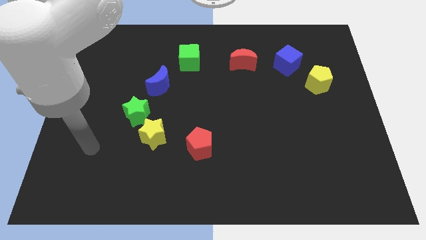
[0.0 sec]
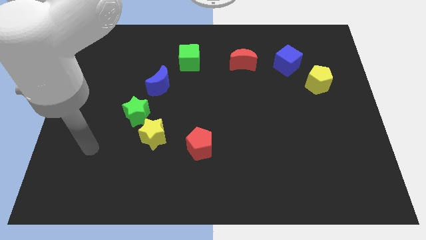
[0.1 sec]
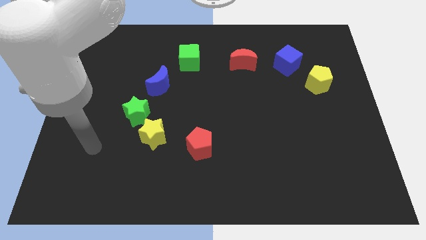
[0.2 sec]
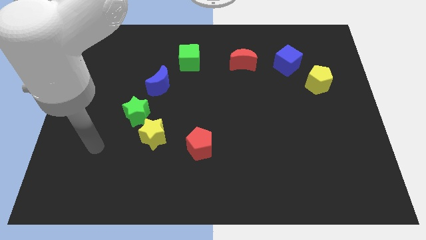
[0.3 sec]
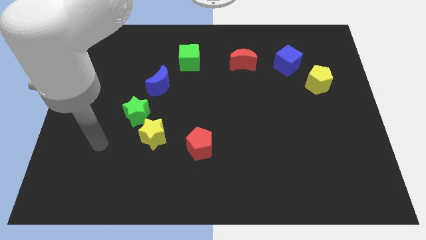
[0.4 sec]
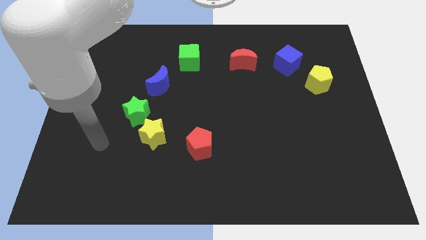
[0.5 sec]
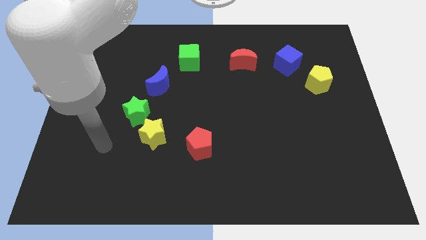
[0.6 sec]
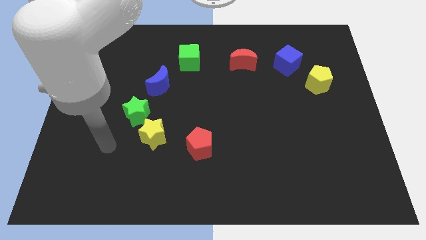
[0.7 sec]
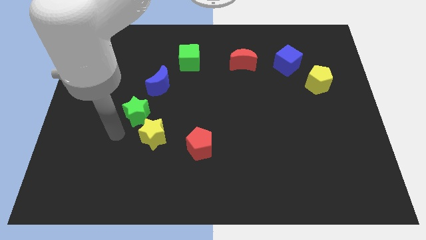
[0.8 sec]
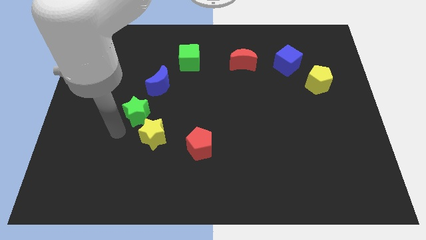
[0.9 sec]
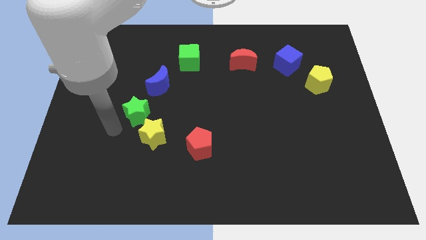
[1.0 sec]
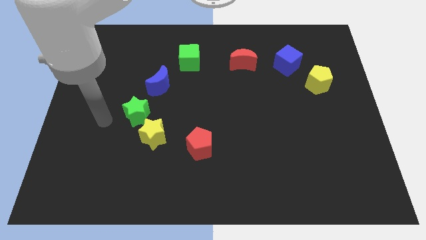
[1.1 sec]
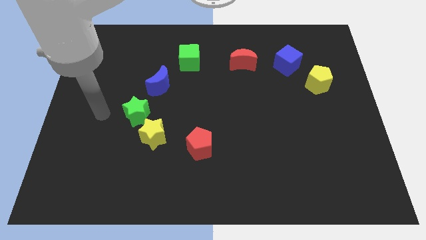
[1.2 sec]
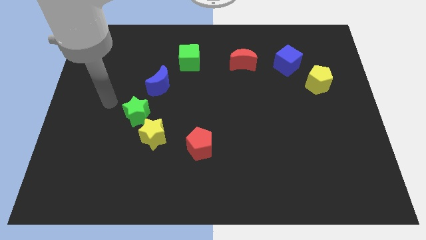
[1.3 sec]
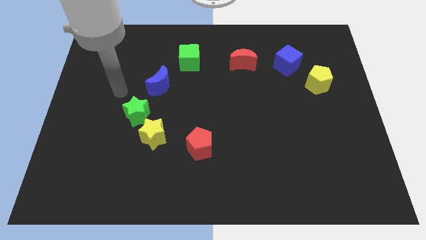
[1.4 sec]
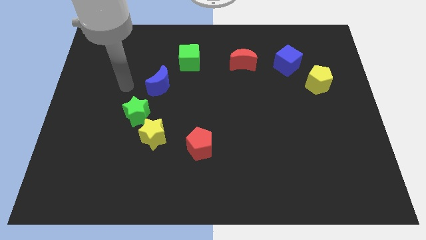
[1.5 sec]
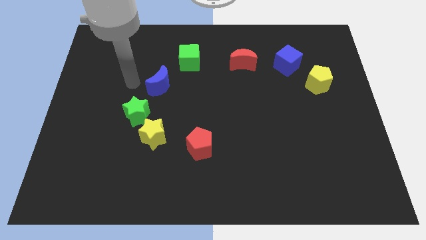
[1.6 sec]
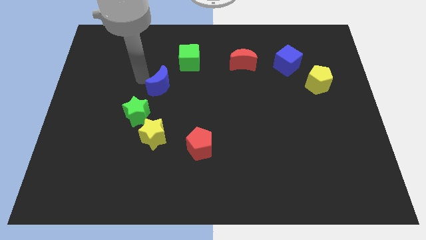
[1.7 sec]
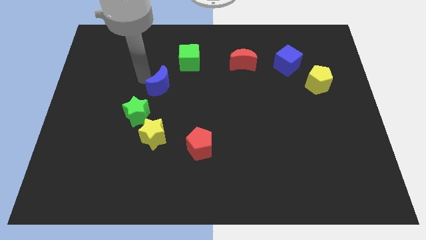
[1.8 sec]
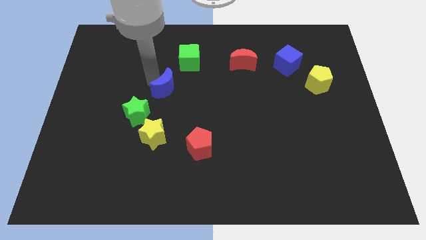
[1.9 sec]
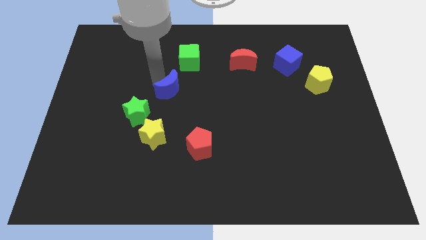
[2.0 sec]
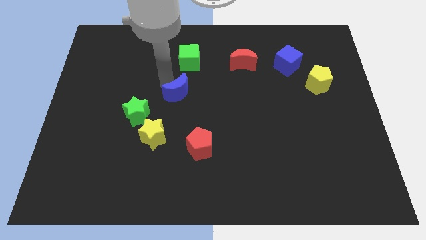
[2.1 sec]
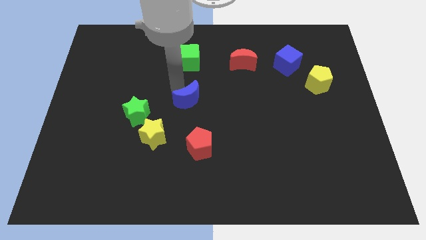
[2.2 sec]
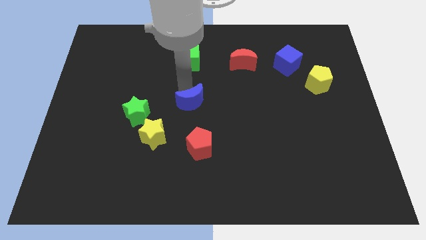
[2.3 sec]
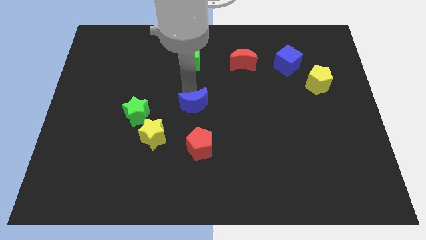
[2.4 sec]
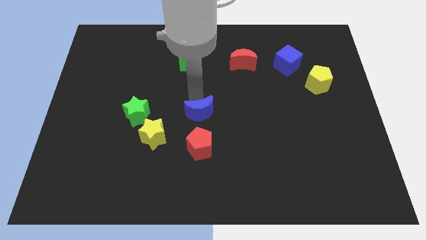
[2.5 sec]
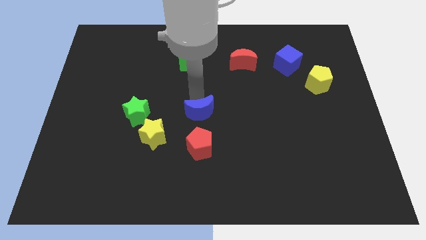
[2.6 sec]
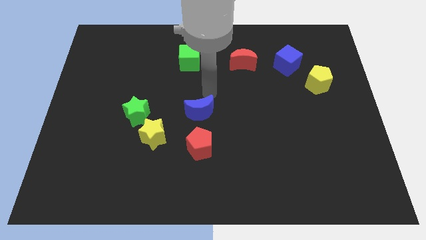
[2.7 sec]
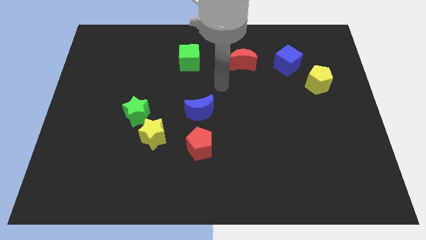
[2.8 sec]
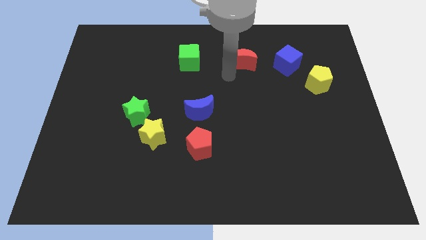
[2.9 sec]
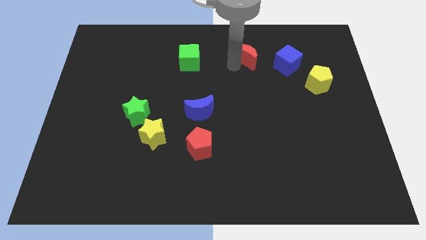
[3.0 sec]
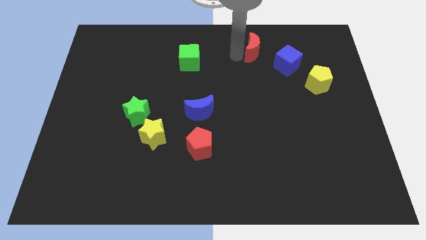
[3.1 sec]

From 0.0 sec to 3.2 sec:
move the blue moon above the red pentgaon

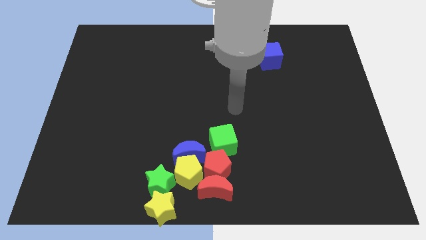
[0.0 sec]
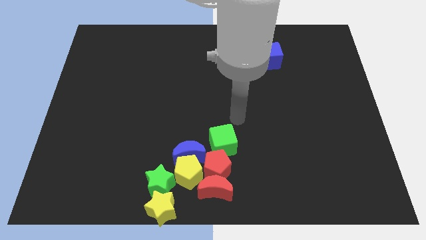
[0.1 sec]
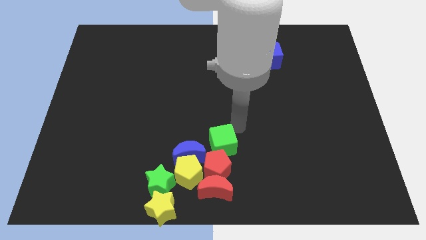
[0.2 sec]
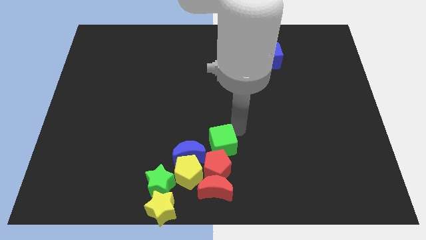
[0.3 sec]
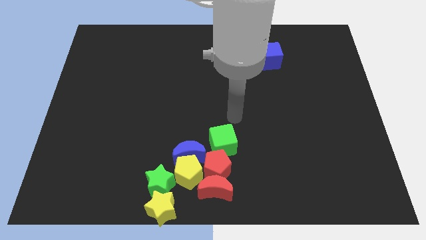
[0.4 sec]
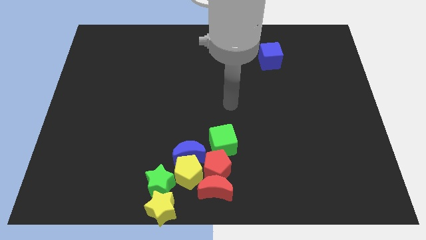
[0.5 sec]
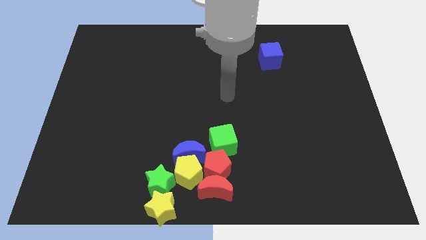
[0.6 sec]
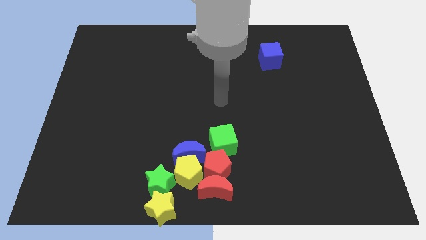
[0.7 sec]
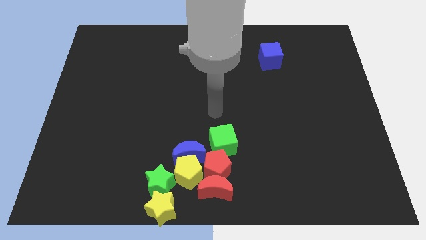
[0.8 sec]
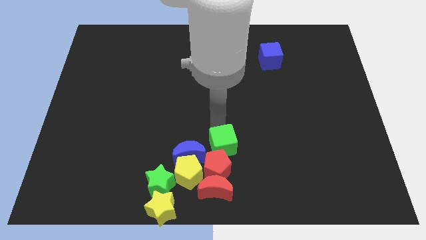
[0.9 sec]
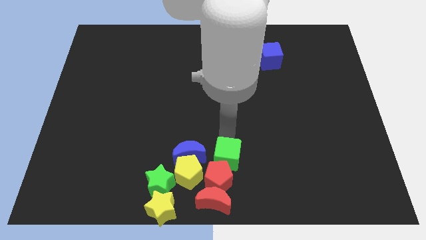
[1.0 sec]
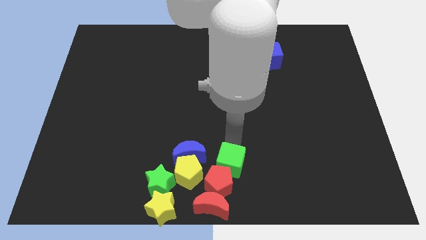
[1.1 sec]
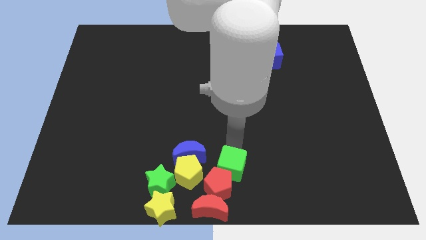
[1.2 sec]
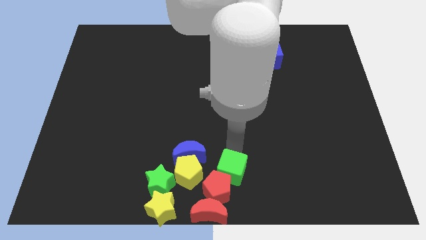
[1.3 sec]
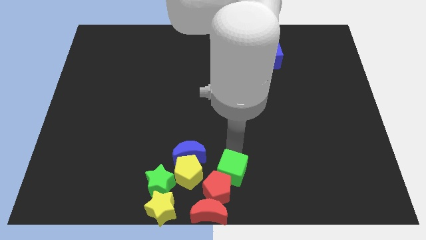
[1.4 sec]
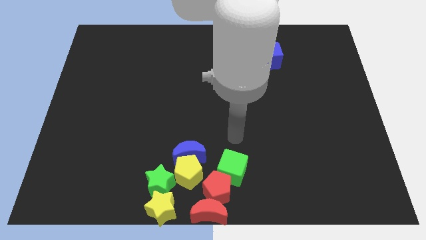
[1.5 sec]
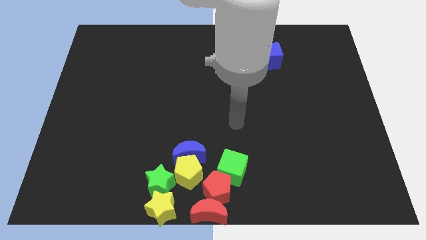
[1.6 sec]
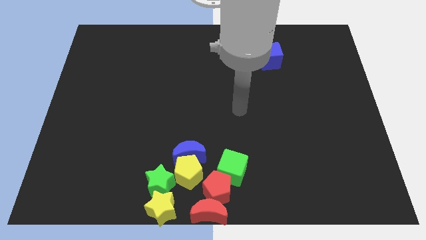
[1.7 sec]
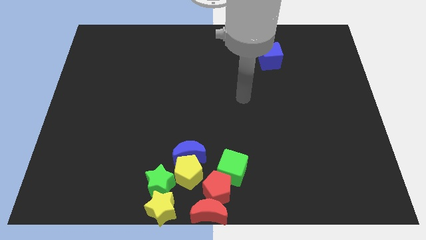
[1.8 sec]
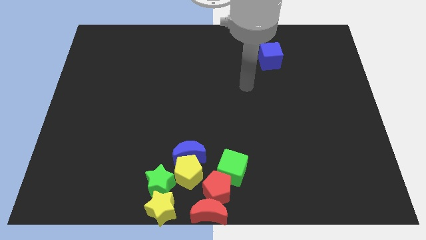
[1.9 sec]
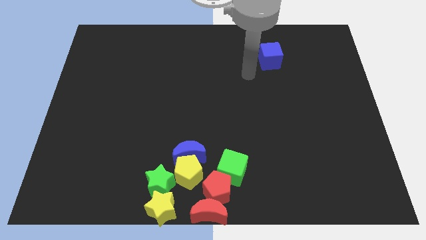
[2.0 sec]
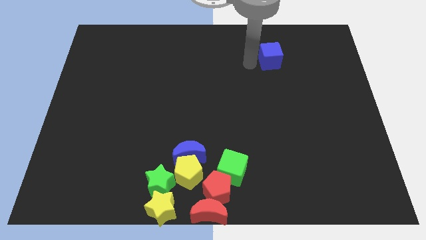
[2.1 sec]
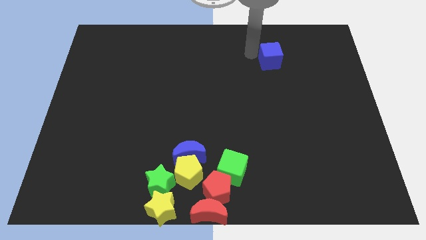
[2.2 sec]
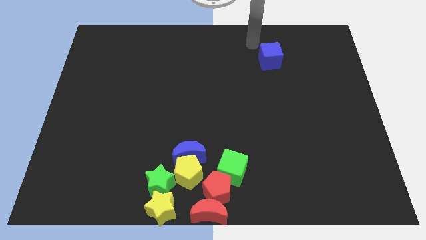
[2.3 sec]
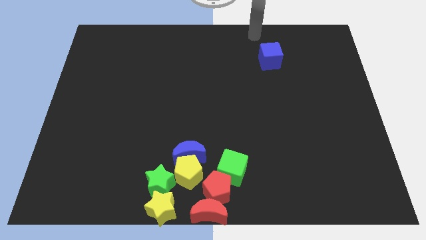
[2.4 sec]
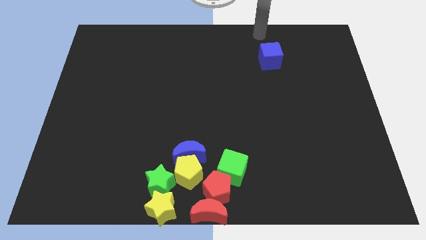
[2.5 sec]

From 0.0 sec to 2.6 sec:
move the green cube and red blocks towards the bottom center of the board

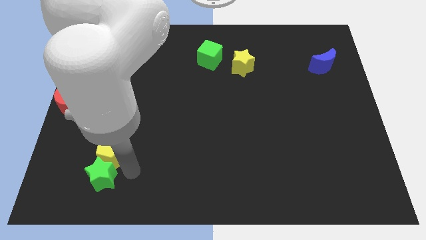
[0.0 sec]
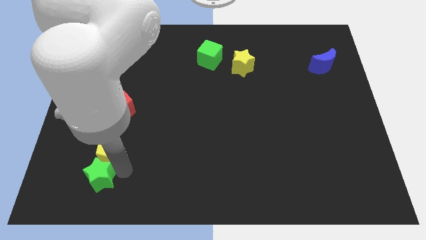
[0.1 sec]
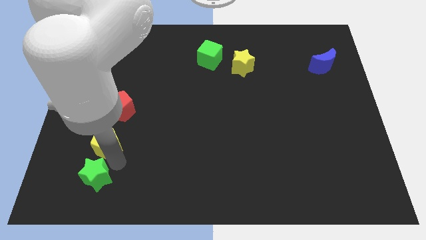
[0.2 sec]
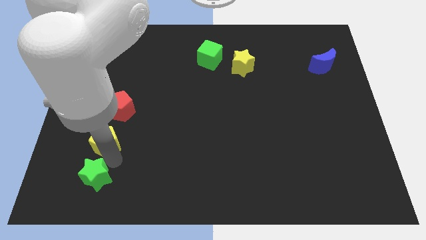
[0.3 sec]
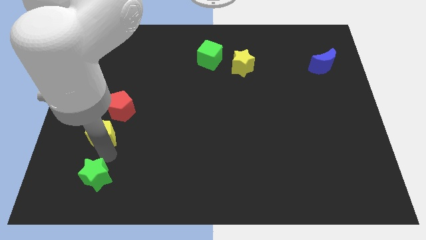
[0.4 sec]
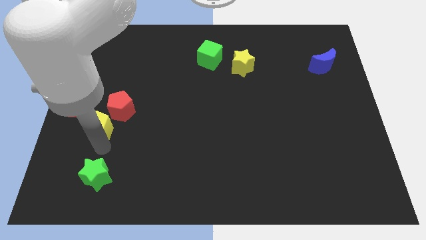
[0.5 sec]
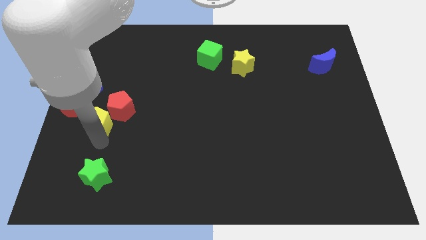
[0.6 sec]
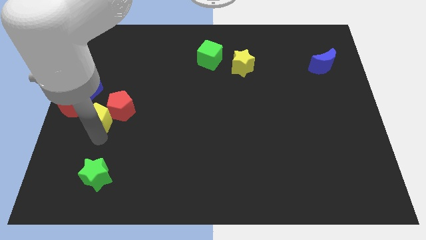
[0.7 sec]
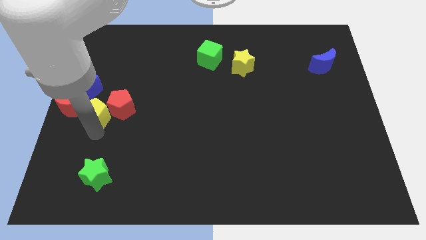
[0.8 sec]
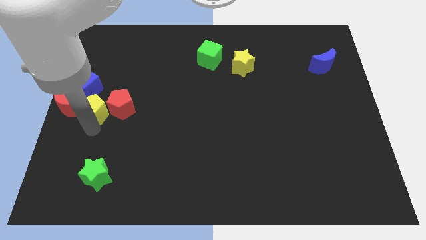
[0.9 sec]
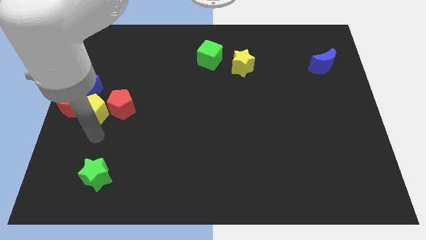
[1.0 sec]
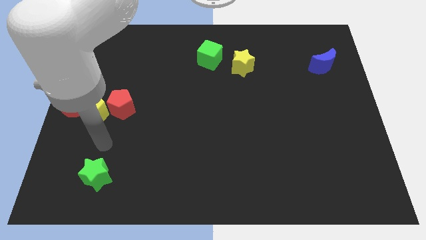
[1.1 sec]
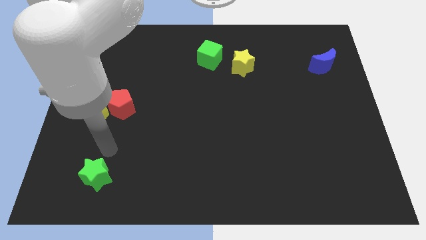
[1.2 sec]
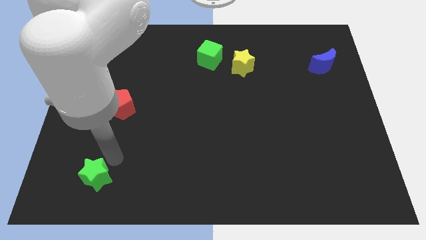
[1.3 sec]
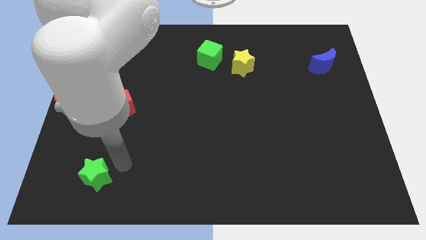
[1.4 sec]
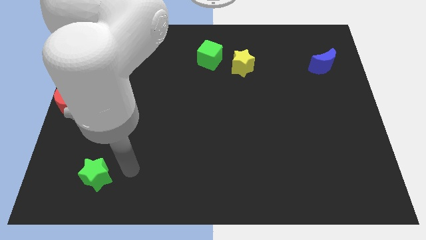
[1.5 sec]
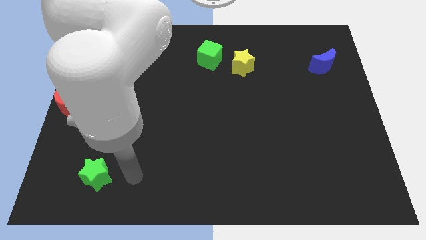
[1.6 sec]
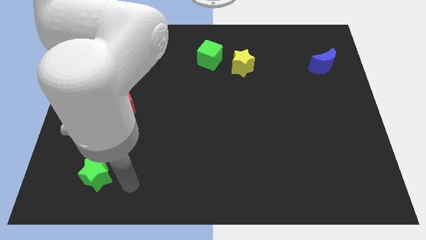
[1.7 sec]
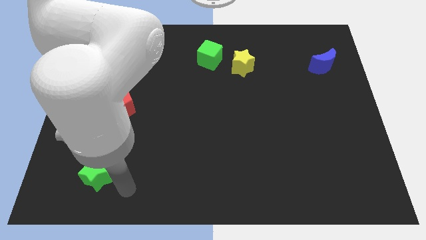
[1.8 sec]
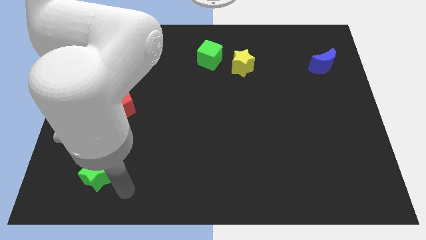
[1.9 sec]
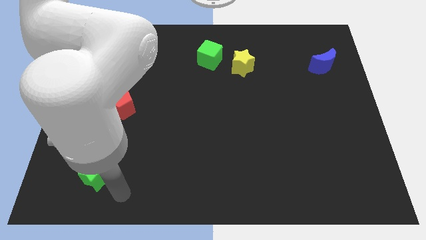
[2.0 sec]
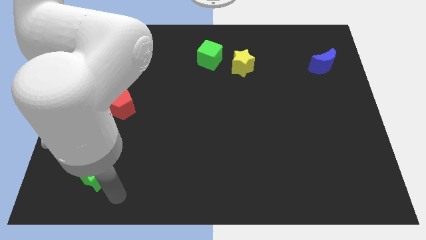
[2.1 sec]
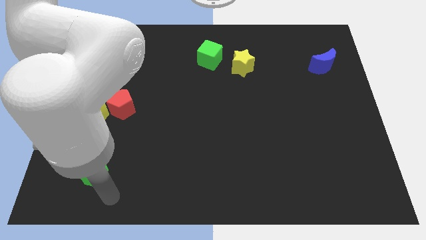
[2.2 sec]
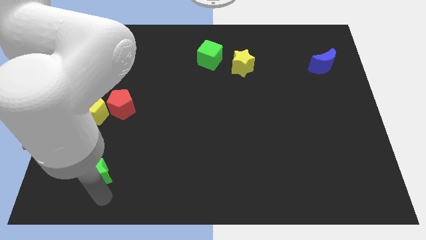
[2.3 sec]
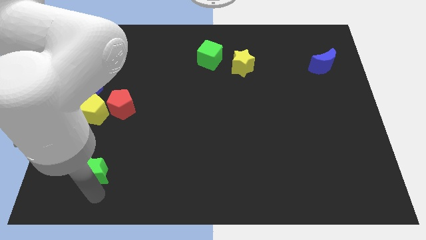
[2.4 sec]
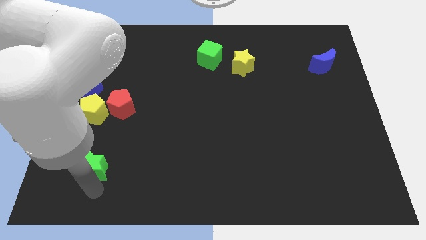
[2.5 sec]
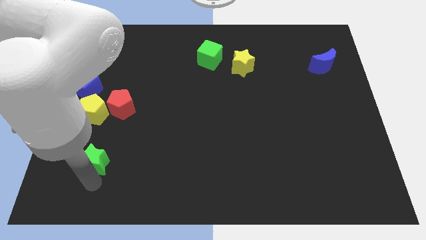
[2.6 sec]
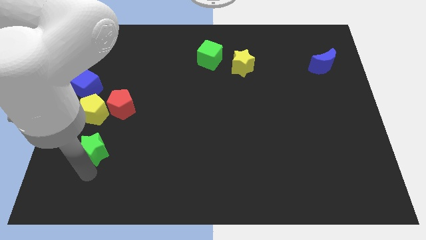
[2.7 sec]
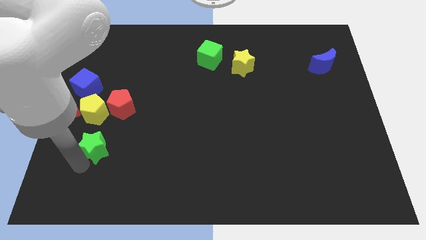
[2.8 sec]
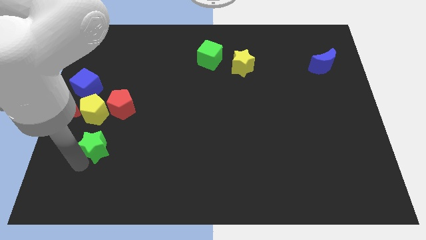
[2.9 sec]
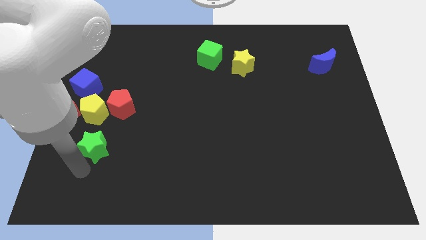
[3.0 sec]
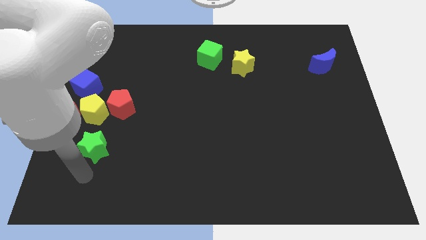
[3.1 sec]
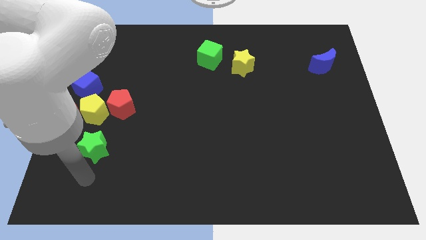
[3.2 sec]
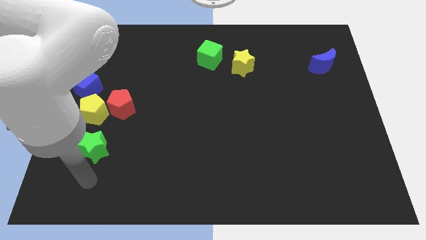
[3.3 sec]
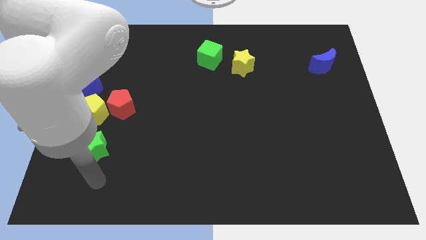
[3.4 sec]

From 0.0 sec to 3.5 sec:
drag the yellow pentagon to the right of the red moon
